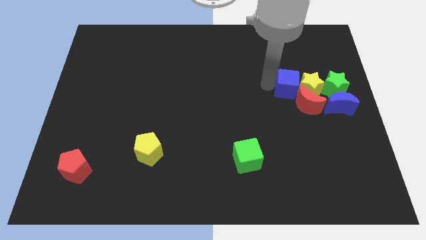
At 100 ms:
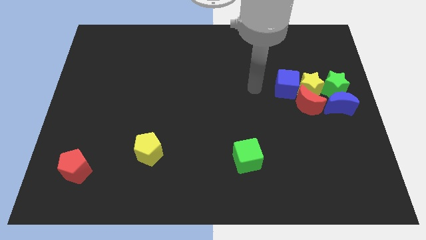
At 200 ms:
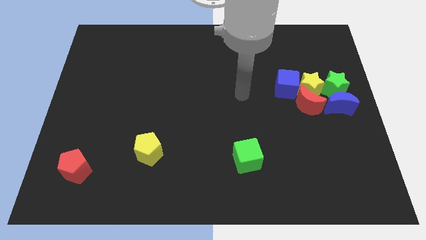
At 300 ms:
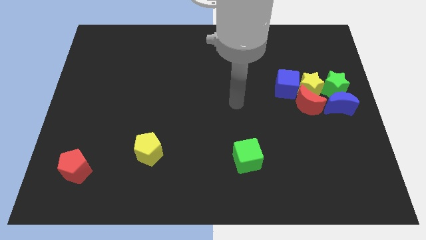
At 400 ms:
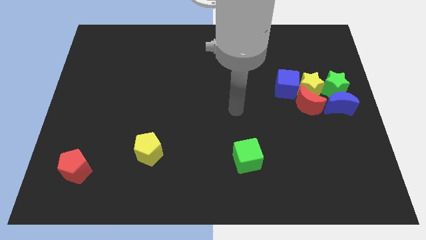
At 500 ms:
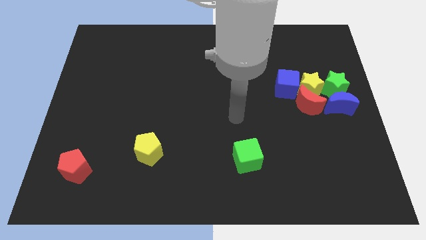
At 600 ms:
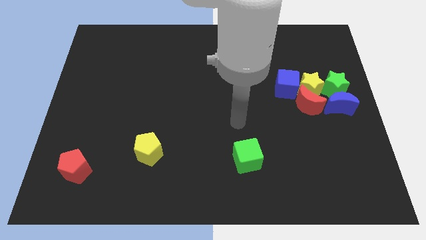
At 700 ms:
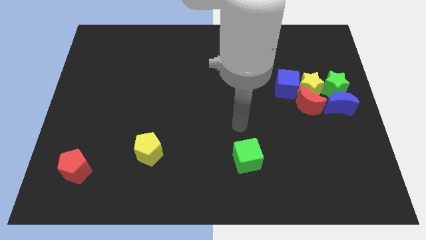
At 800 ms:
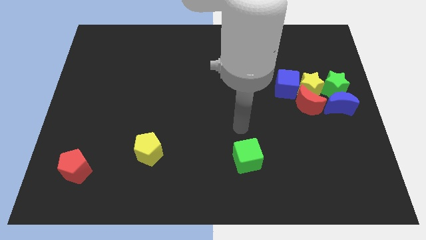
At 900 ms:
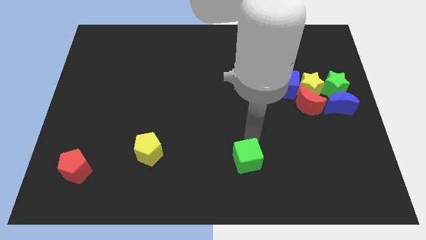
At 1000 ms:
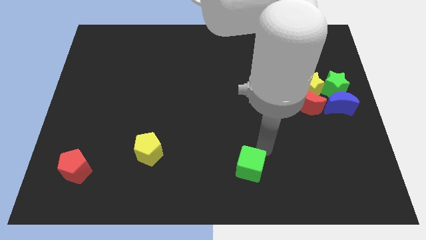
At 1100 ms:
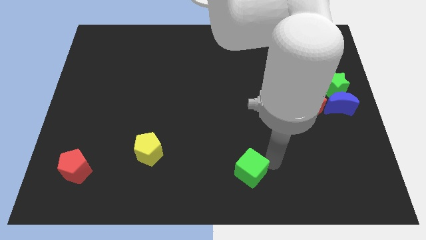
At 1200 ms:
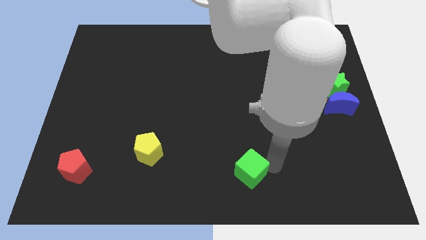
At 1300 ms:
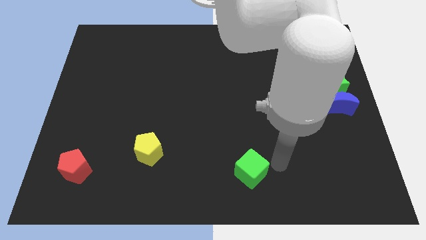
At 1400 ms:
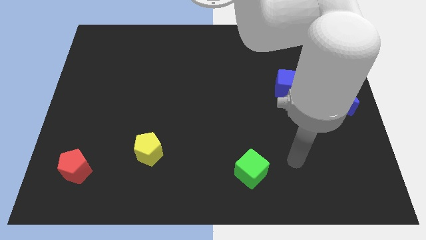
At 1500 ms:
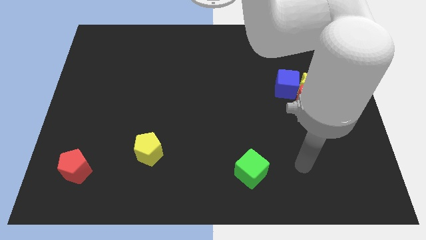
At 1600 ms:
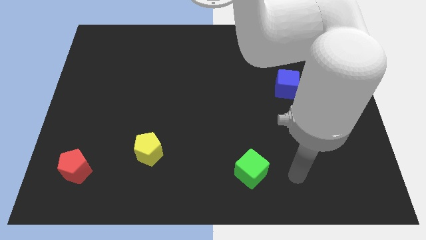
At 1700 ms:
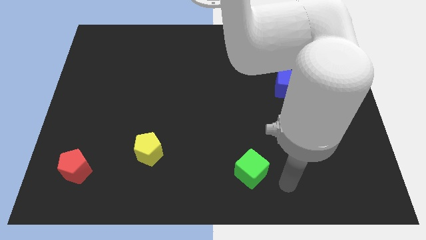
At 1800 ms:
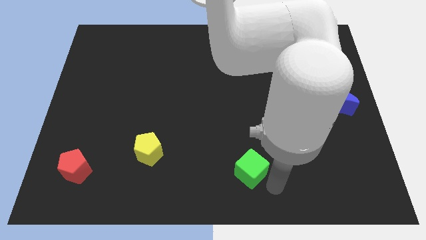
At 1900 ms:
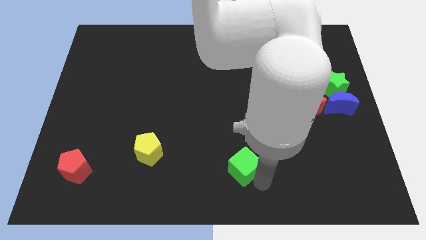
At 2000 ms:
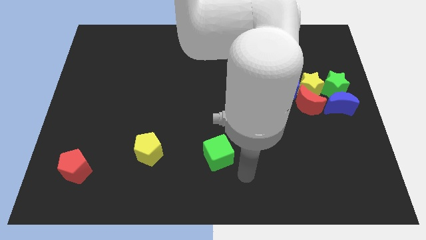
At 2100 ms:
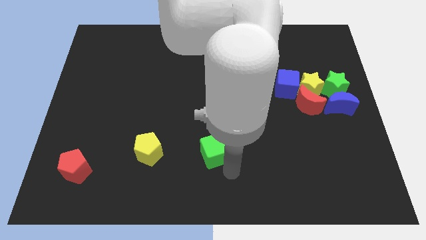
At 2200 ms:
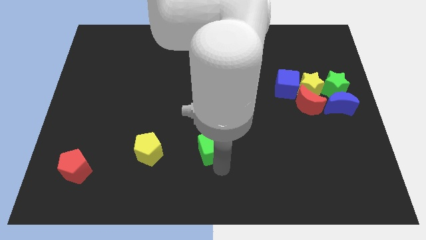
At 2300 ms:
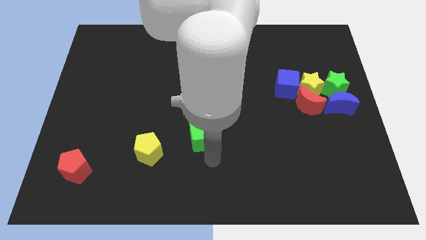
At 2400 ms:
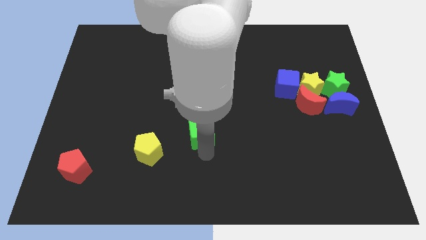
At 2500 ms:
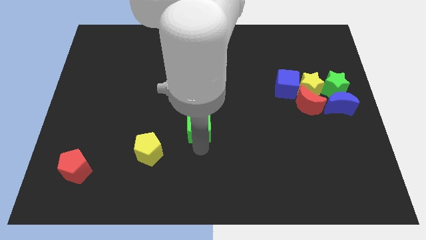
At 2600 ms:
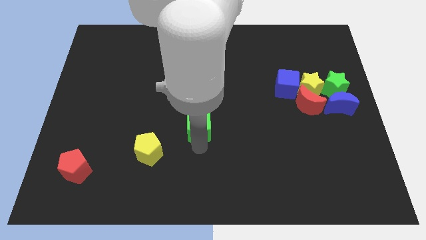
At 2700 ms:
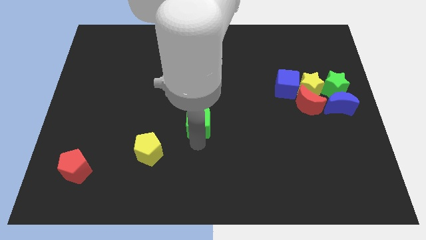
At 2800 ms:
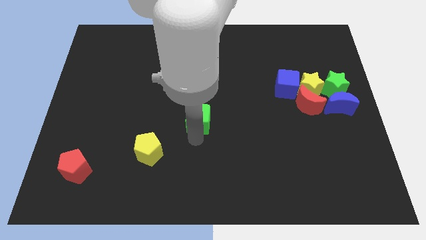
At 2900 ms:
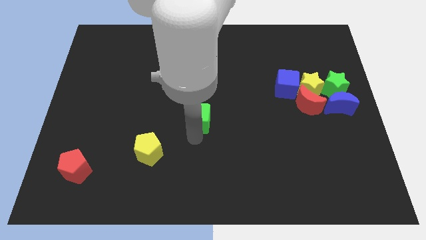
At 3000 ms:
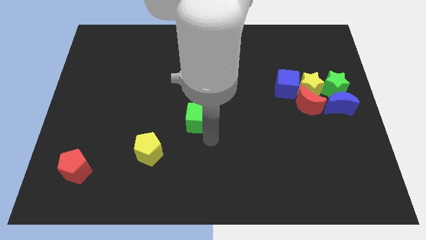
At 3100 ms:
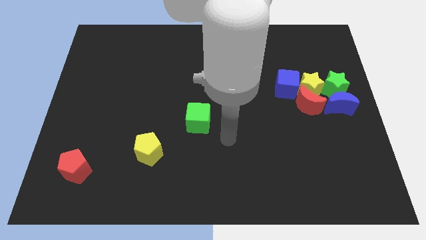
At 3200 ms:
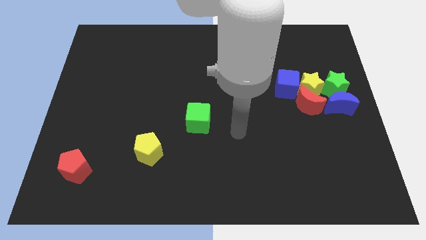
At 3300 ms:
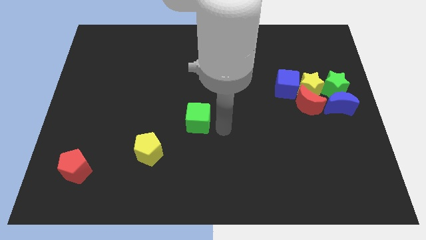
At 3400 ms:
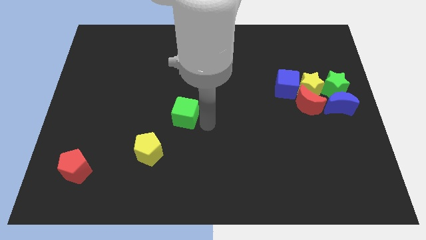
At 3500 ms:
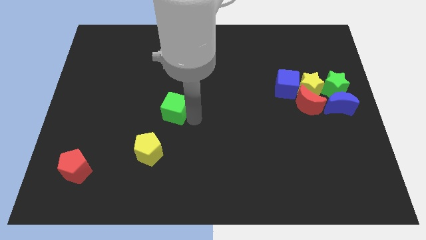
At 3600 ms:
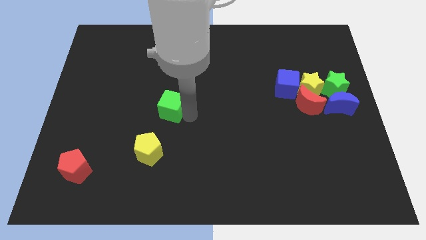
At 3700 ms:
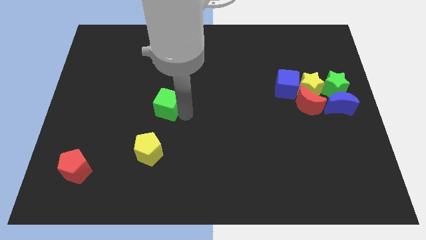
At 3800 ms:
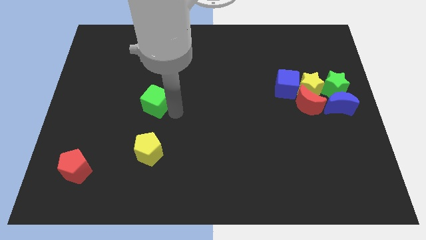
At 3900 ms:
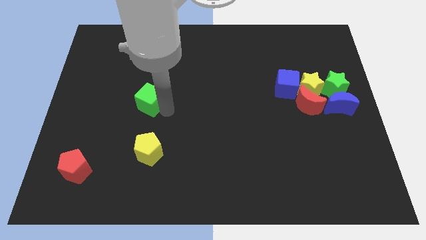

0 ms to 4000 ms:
move the green cube to the top side of the yellow pentagon

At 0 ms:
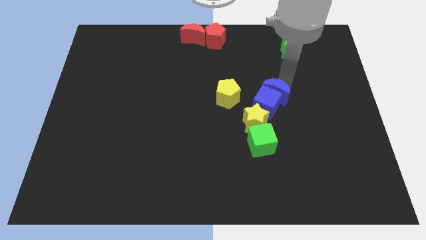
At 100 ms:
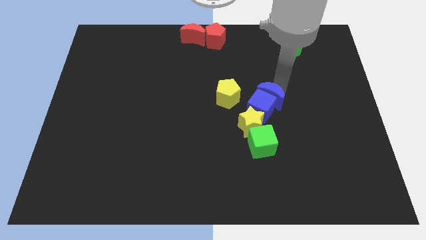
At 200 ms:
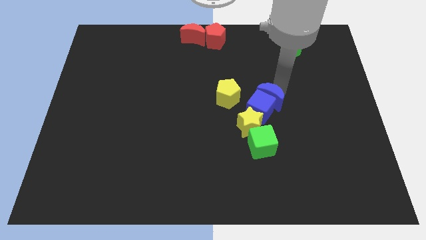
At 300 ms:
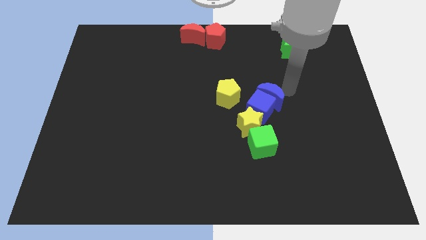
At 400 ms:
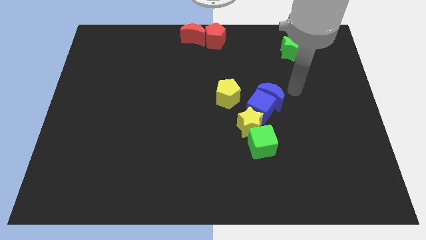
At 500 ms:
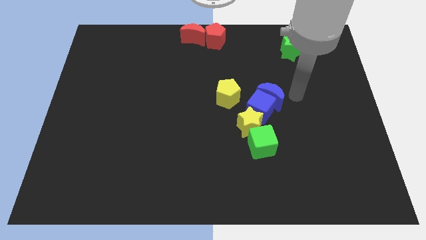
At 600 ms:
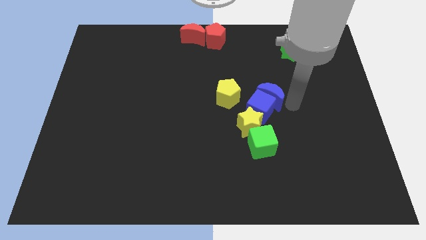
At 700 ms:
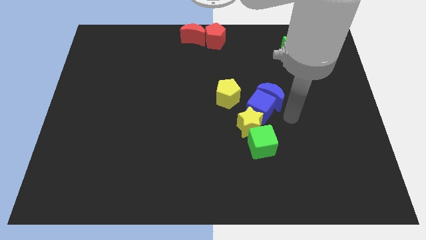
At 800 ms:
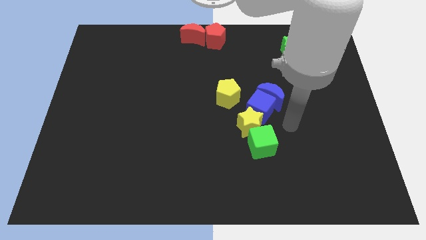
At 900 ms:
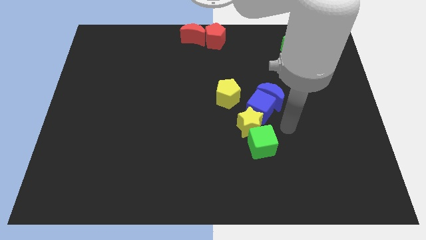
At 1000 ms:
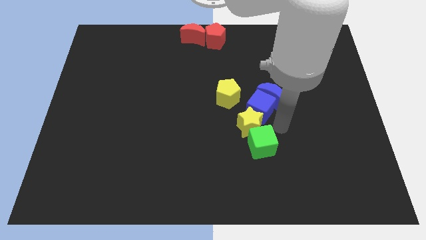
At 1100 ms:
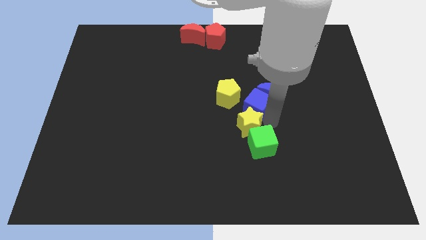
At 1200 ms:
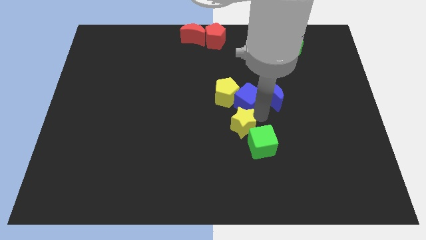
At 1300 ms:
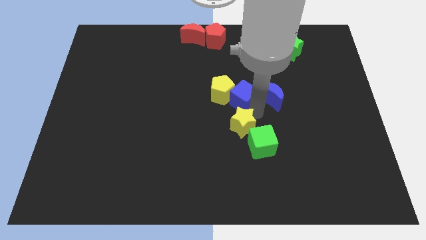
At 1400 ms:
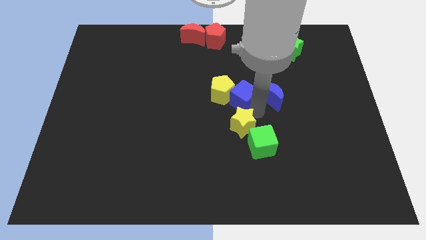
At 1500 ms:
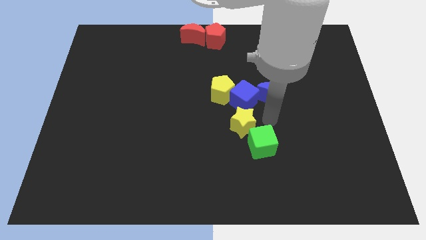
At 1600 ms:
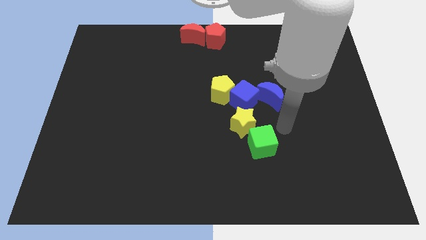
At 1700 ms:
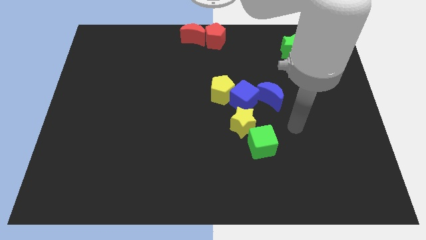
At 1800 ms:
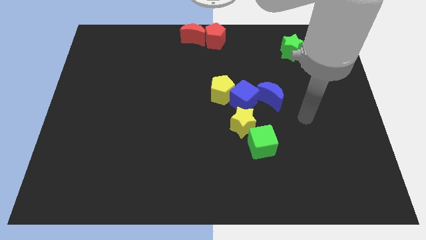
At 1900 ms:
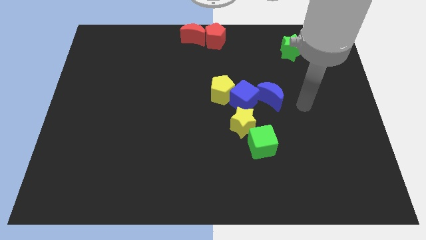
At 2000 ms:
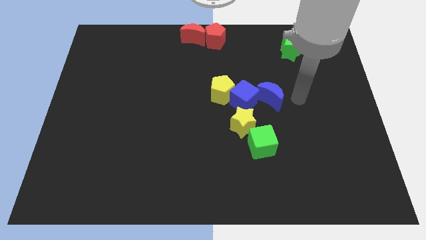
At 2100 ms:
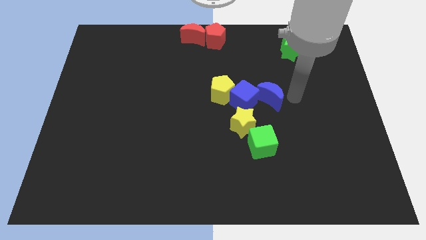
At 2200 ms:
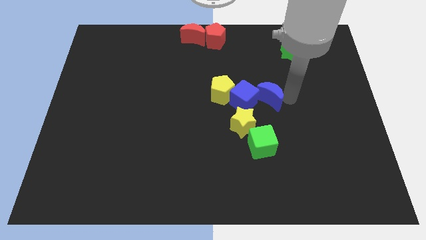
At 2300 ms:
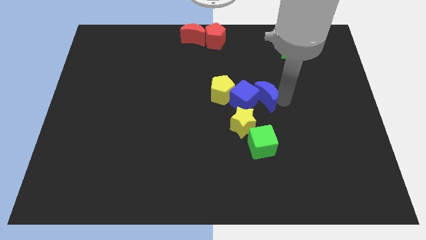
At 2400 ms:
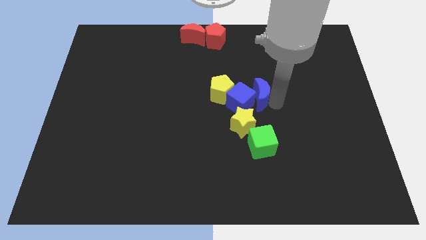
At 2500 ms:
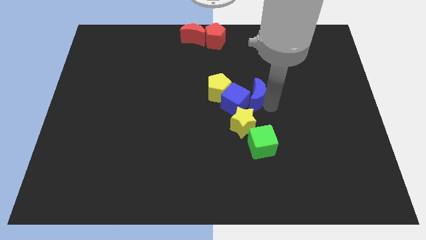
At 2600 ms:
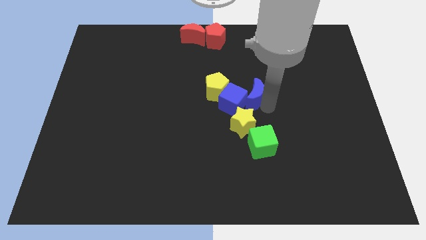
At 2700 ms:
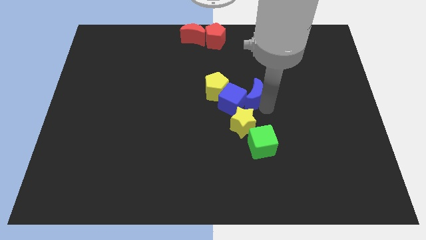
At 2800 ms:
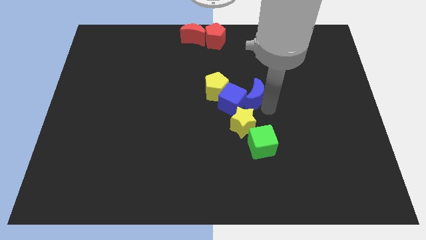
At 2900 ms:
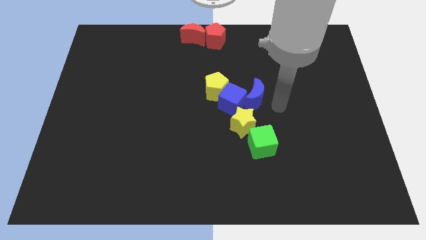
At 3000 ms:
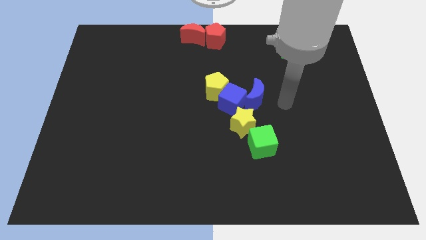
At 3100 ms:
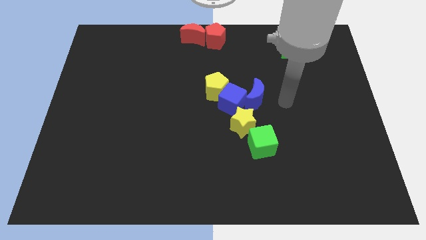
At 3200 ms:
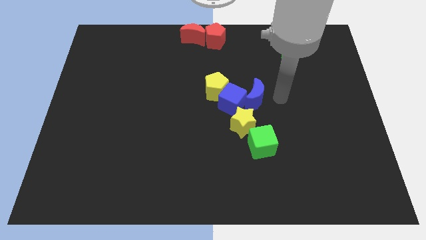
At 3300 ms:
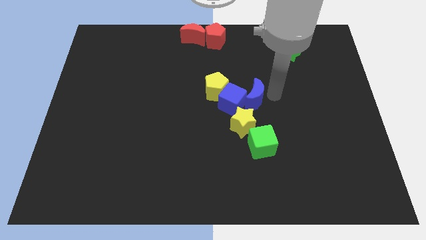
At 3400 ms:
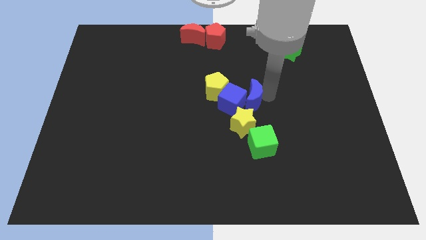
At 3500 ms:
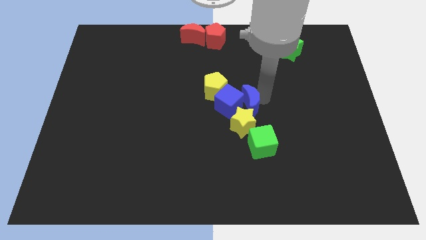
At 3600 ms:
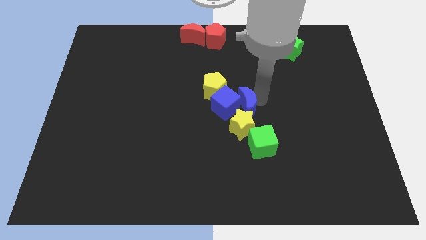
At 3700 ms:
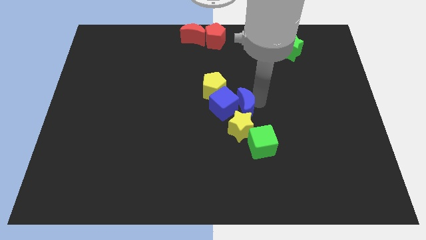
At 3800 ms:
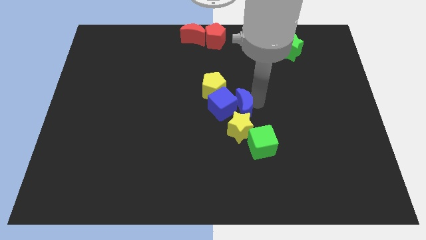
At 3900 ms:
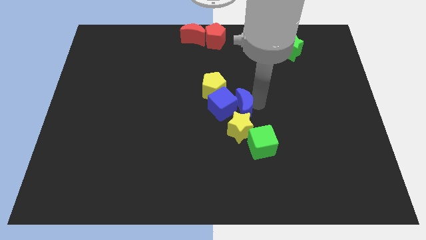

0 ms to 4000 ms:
place the blue cube between yellow pentagon and yellow star

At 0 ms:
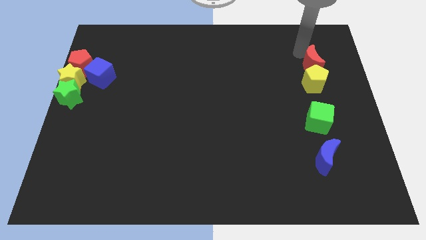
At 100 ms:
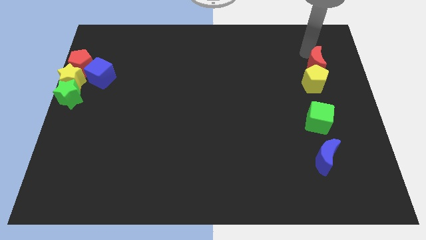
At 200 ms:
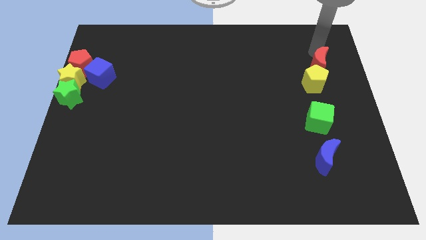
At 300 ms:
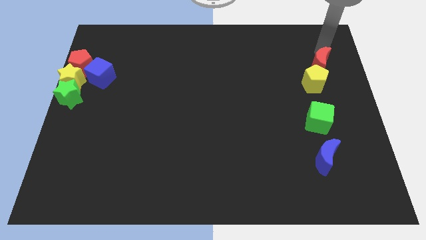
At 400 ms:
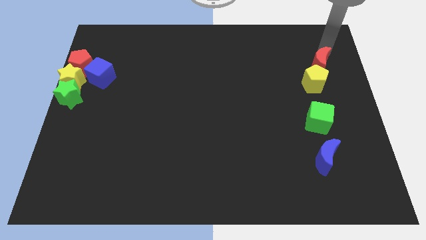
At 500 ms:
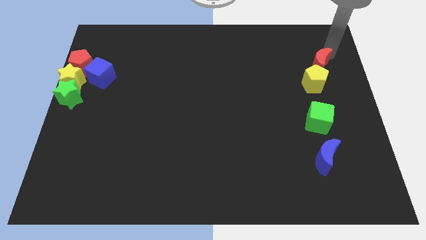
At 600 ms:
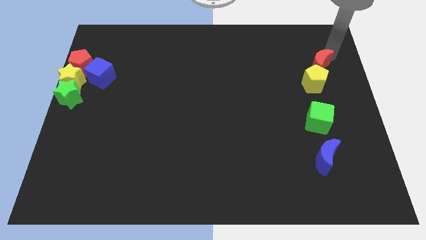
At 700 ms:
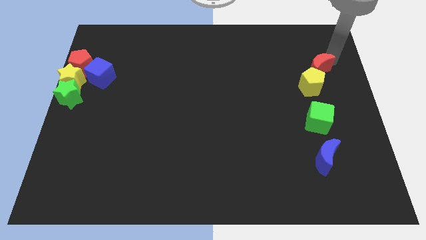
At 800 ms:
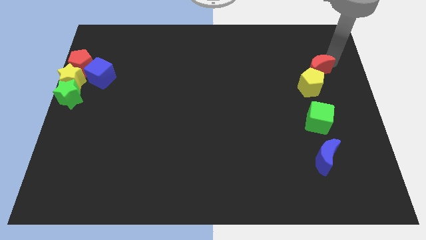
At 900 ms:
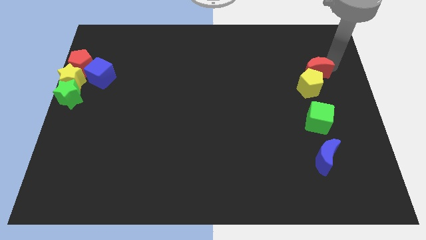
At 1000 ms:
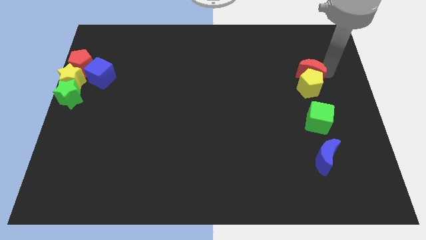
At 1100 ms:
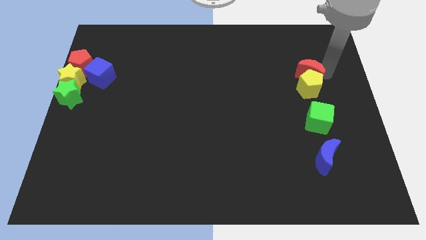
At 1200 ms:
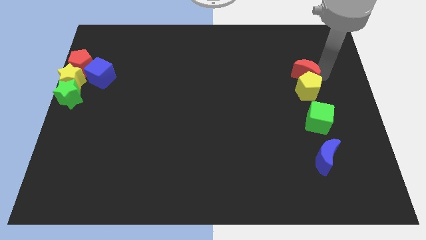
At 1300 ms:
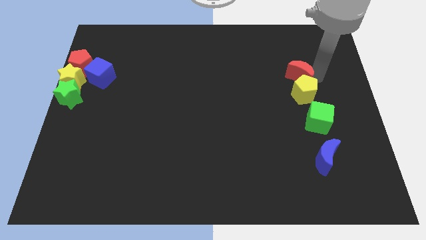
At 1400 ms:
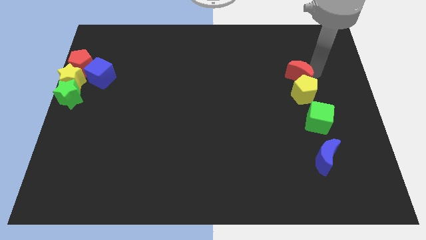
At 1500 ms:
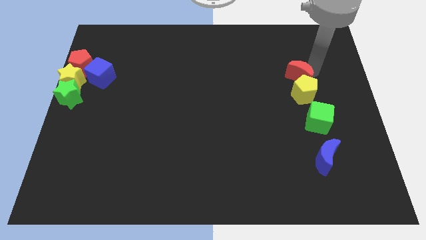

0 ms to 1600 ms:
push the red moon into the yellow pentagon
